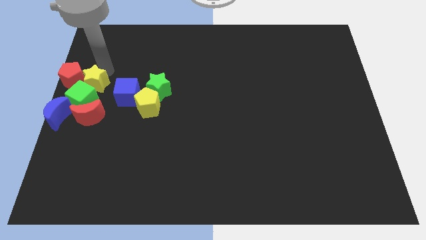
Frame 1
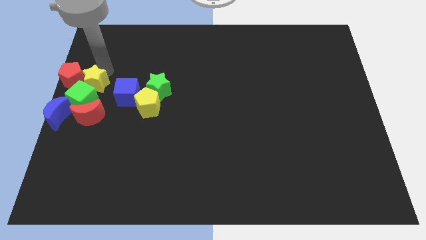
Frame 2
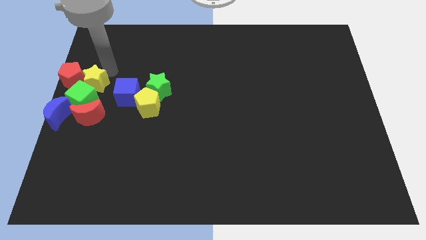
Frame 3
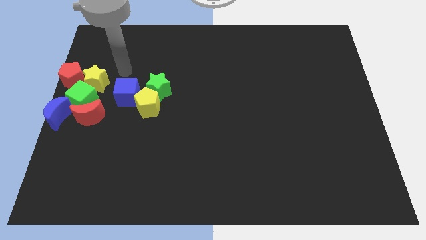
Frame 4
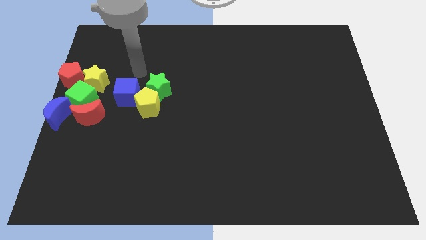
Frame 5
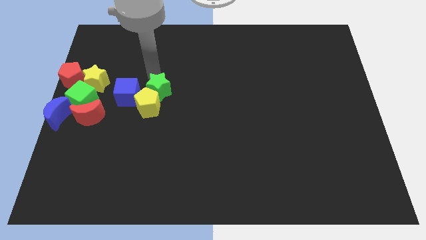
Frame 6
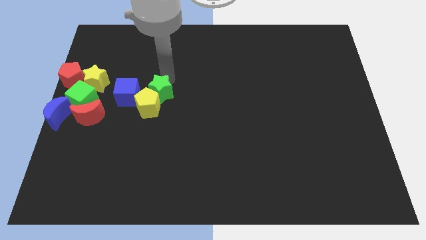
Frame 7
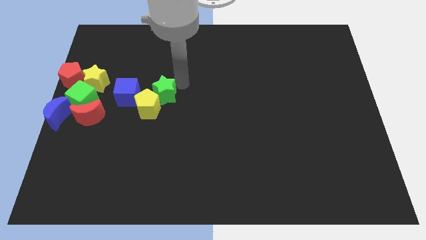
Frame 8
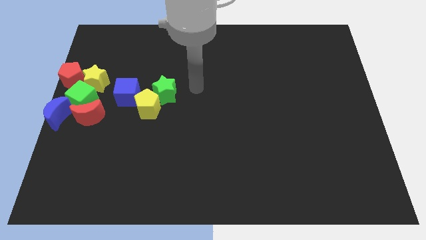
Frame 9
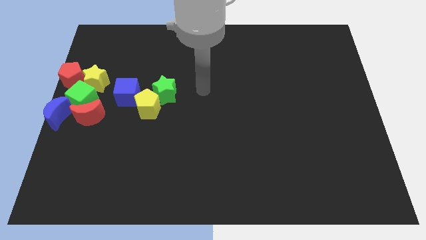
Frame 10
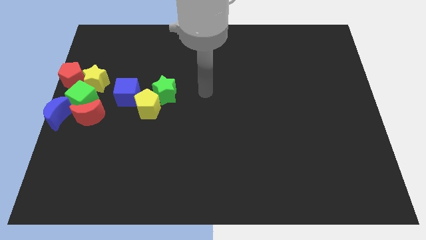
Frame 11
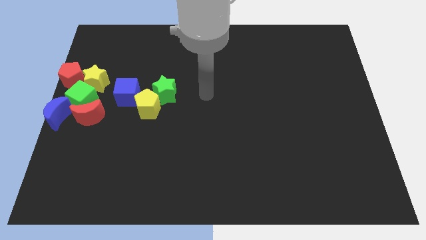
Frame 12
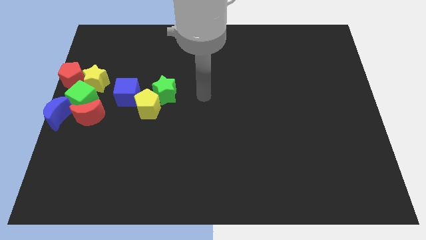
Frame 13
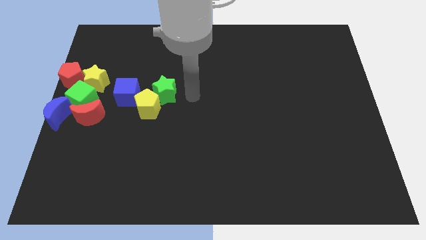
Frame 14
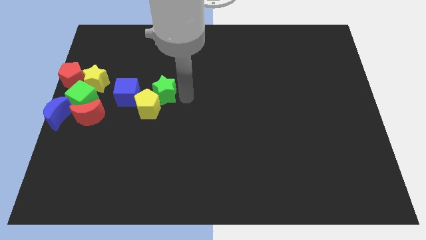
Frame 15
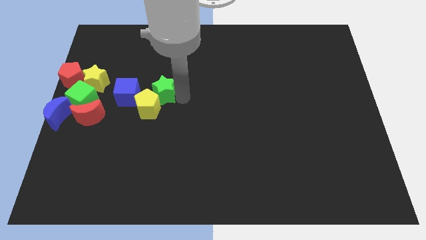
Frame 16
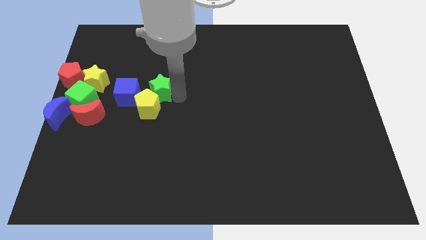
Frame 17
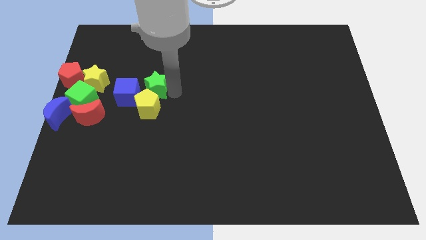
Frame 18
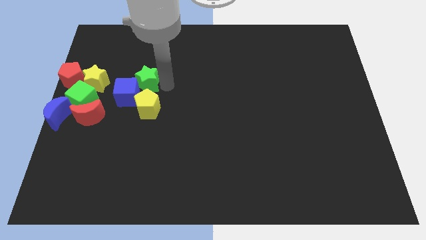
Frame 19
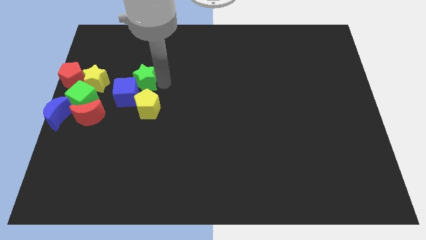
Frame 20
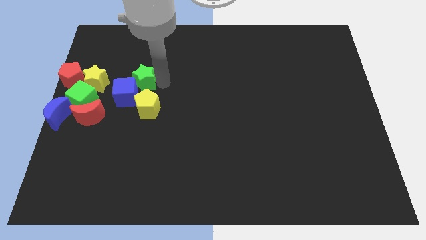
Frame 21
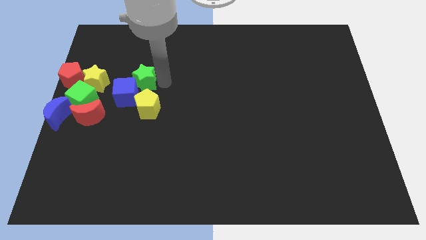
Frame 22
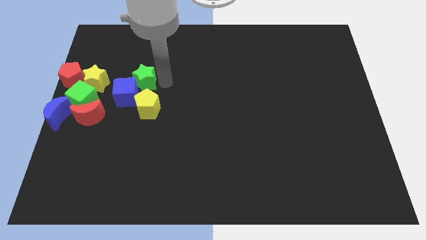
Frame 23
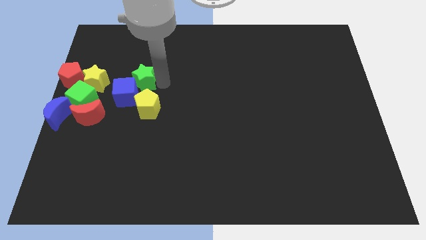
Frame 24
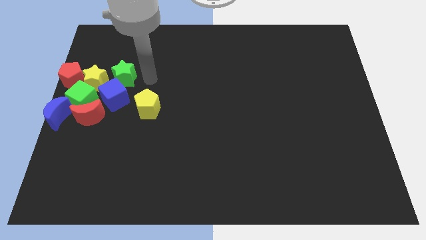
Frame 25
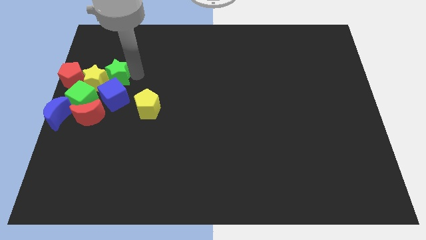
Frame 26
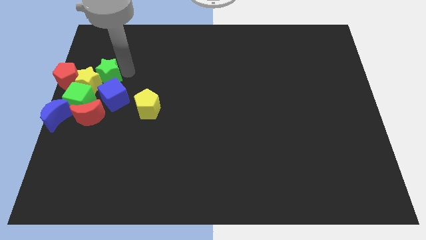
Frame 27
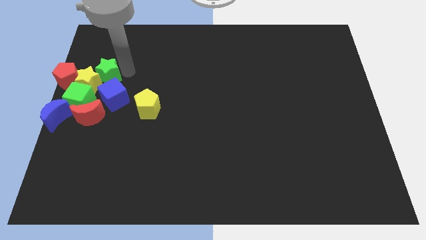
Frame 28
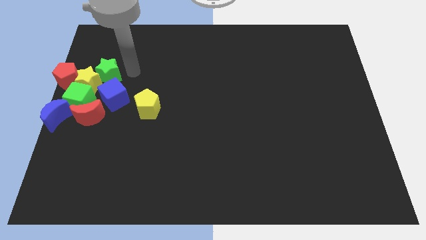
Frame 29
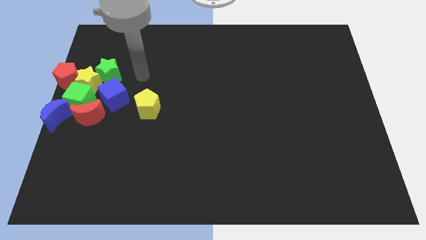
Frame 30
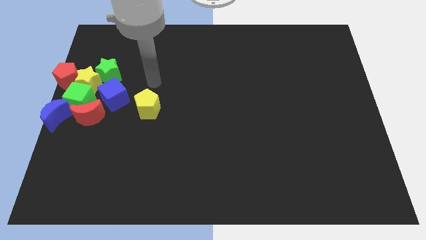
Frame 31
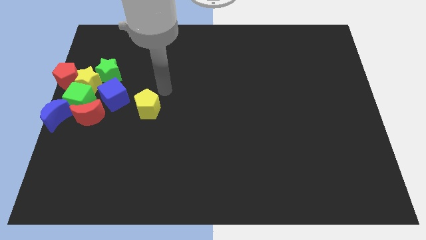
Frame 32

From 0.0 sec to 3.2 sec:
bring the green star at the top right side of the yellow star

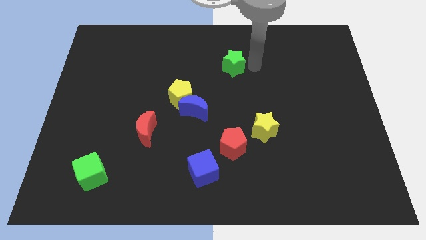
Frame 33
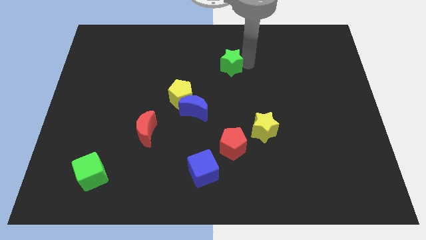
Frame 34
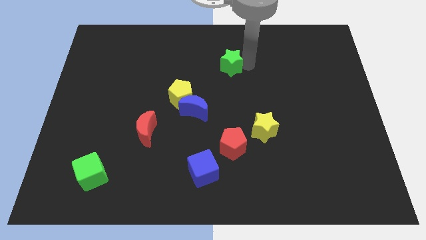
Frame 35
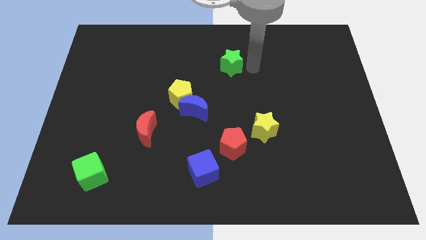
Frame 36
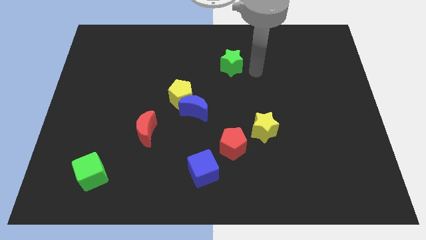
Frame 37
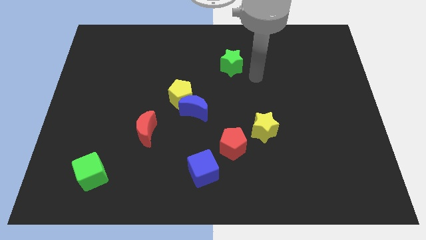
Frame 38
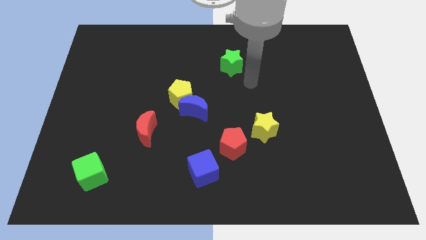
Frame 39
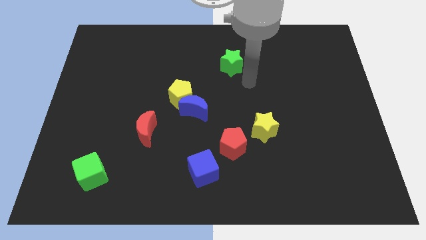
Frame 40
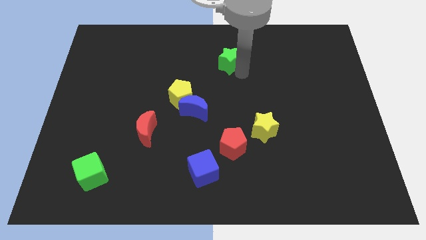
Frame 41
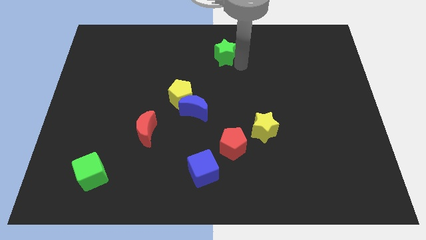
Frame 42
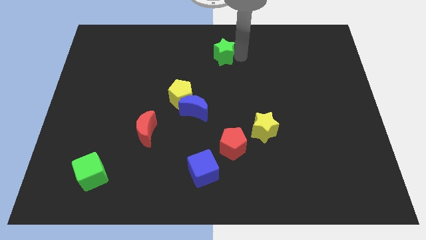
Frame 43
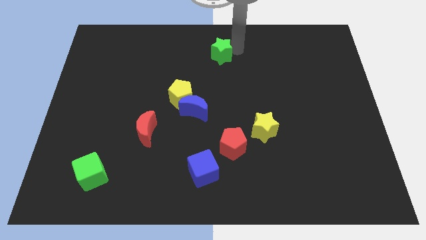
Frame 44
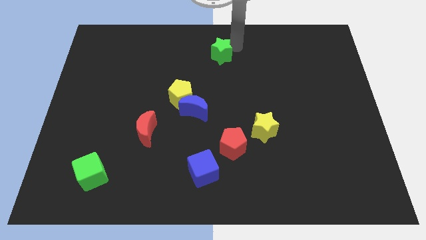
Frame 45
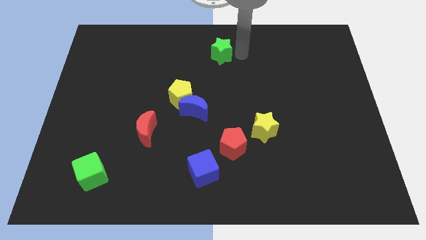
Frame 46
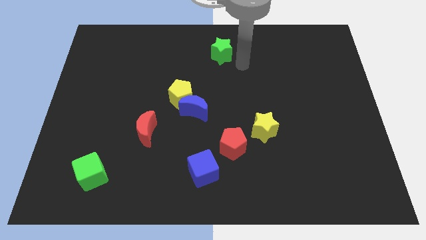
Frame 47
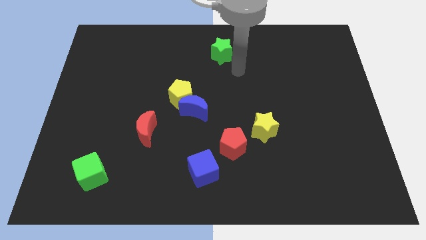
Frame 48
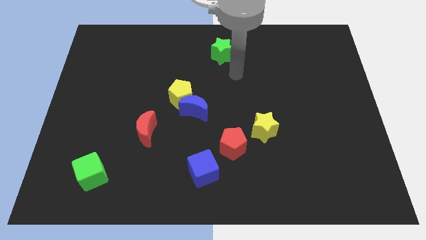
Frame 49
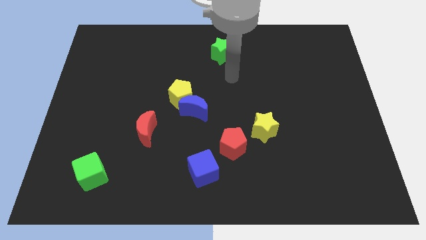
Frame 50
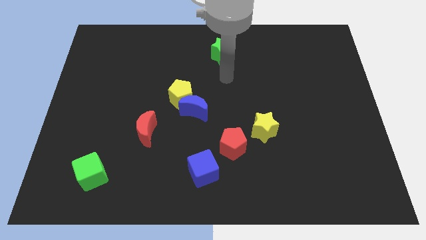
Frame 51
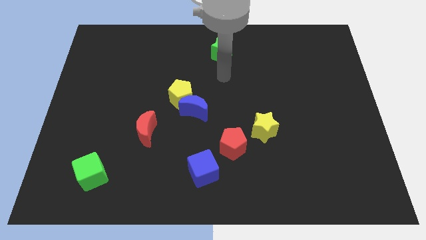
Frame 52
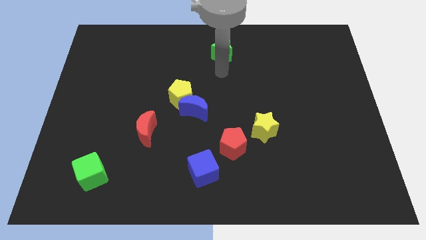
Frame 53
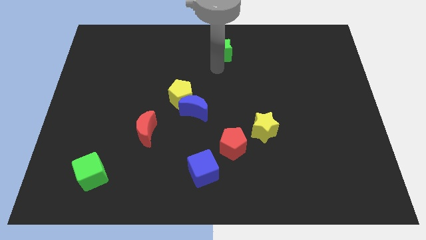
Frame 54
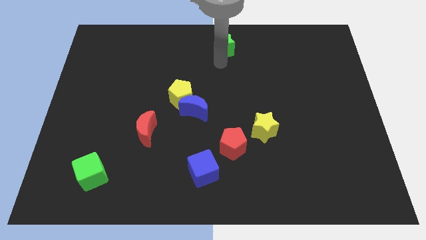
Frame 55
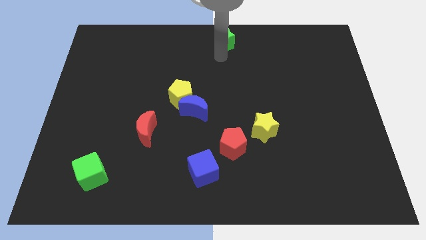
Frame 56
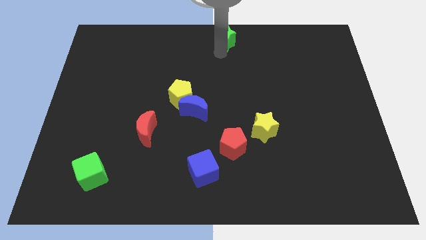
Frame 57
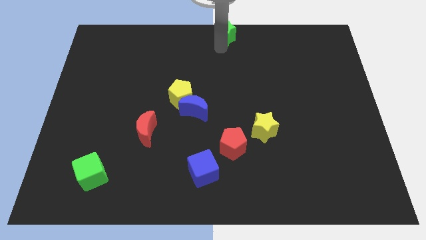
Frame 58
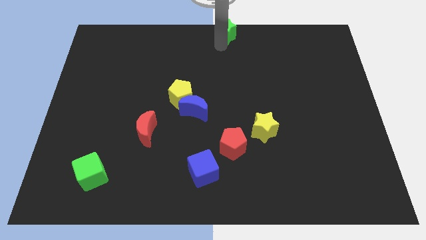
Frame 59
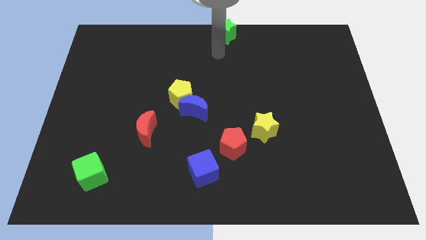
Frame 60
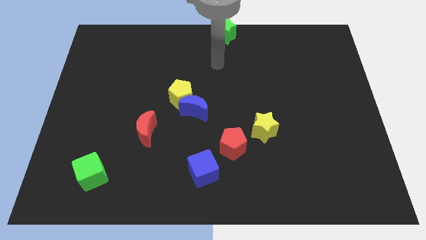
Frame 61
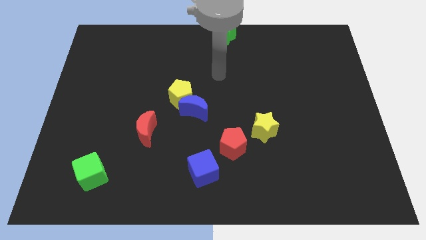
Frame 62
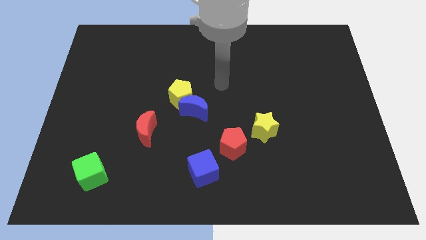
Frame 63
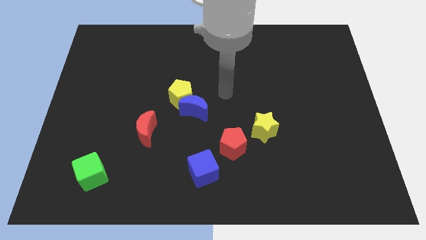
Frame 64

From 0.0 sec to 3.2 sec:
place the green star at the top center

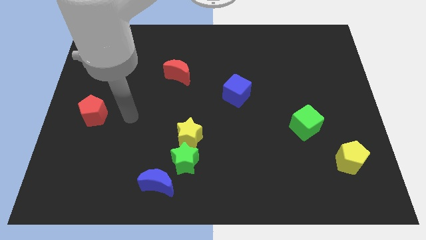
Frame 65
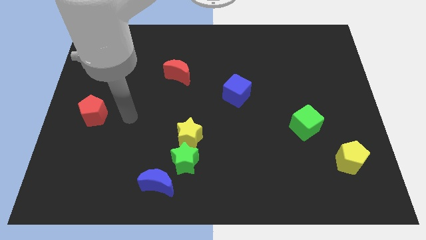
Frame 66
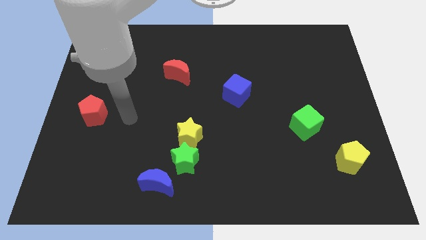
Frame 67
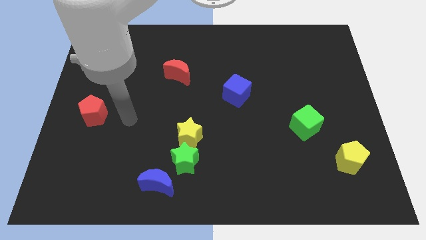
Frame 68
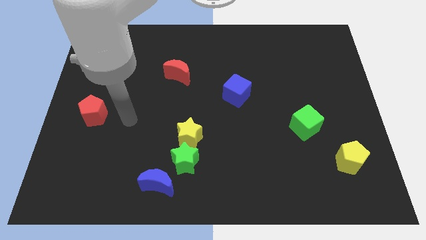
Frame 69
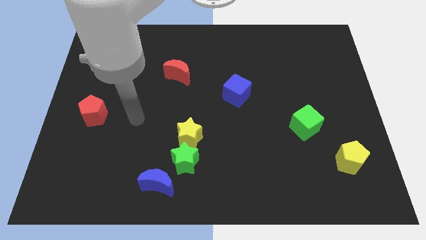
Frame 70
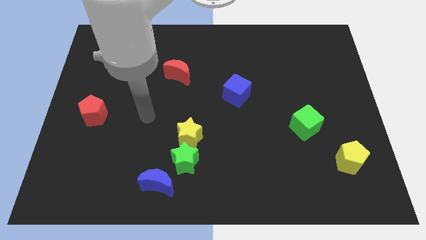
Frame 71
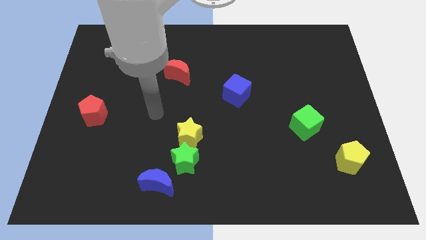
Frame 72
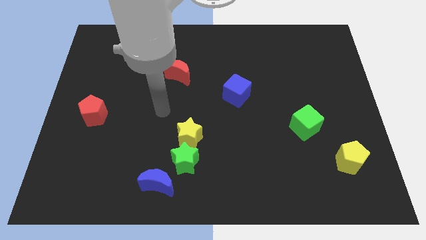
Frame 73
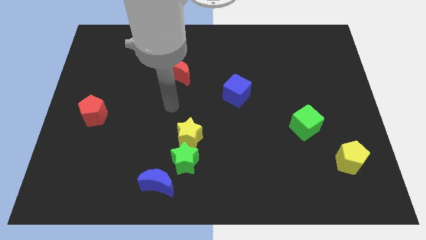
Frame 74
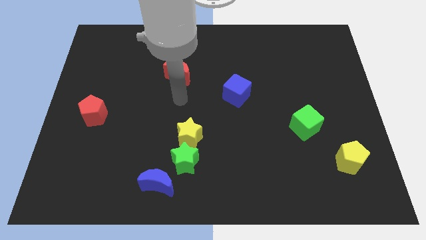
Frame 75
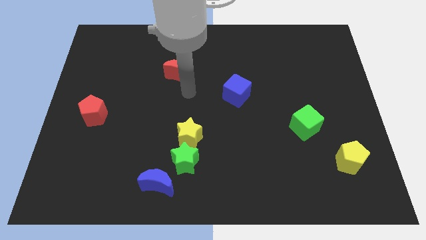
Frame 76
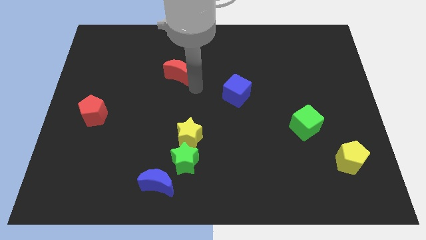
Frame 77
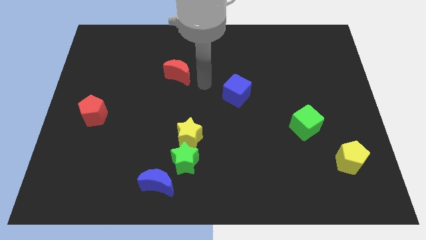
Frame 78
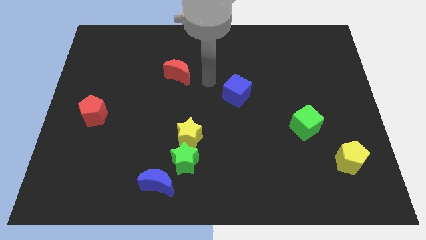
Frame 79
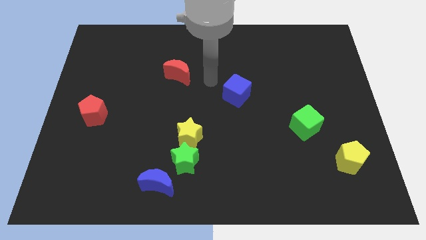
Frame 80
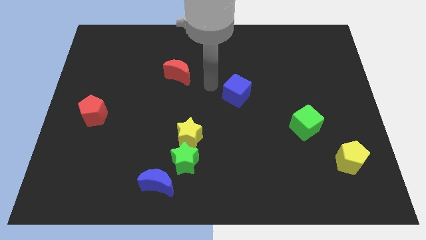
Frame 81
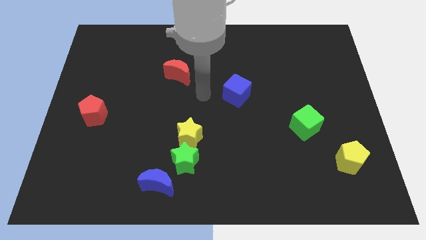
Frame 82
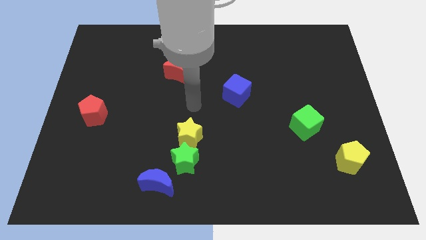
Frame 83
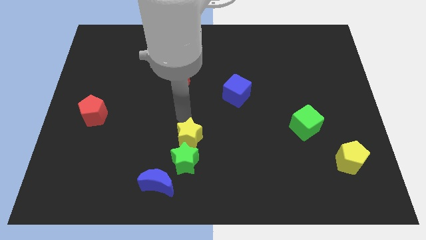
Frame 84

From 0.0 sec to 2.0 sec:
place your arm above the yellow star

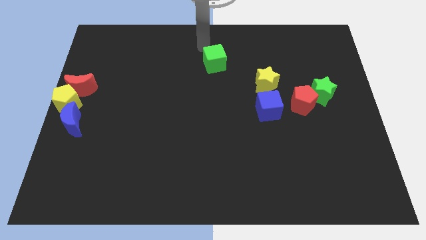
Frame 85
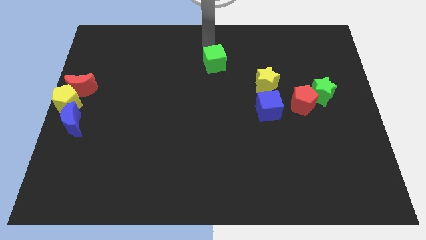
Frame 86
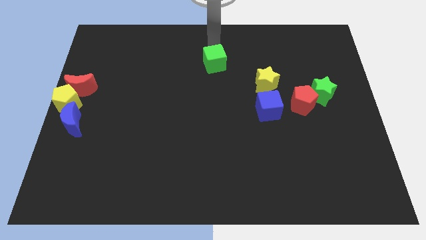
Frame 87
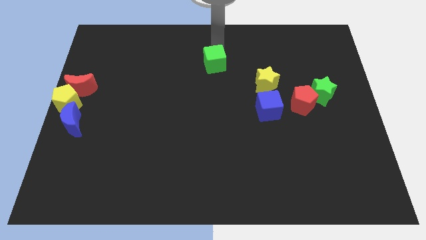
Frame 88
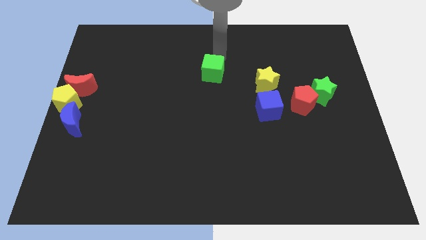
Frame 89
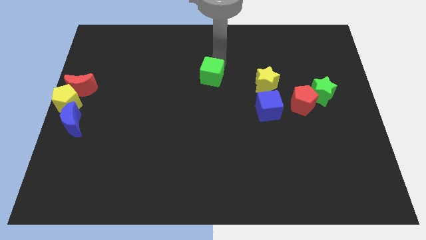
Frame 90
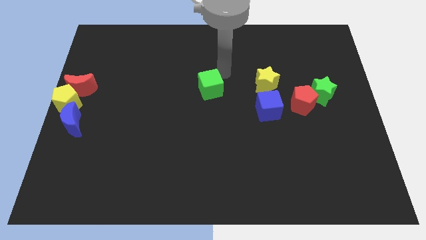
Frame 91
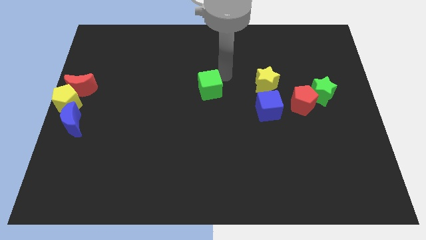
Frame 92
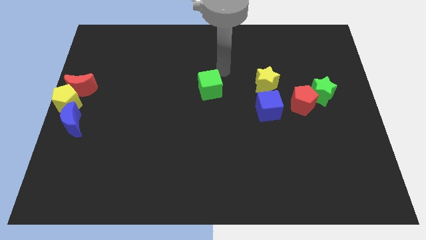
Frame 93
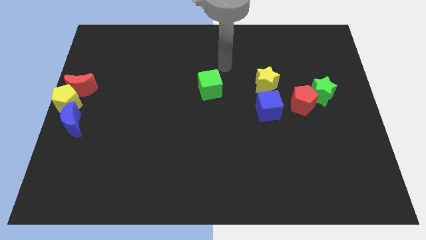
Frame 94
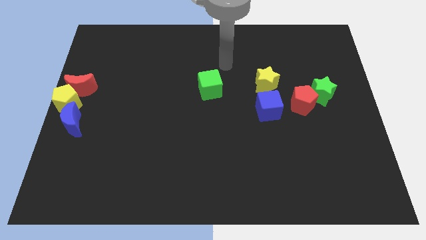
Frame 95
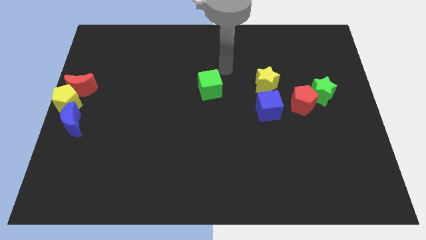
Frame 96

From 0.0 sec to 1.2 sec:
push the green cube to the center of the board
